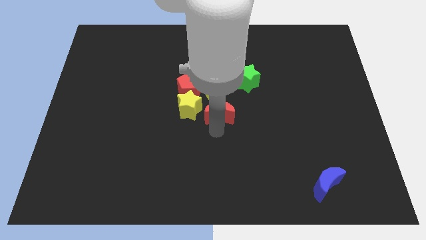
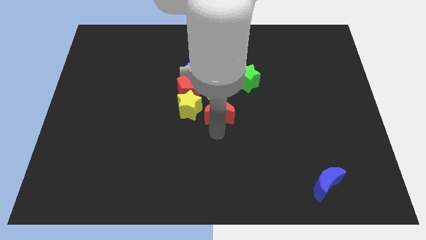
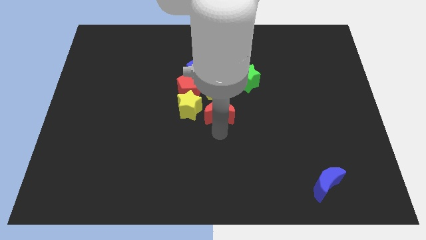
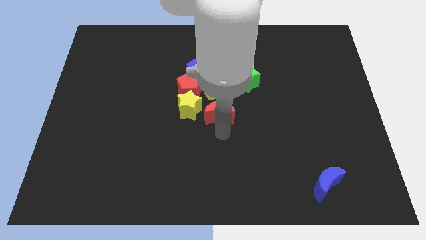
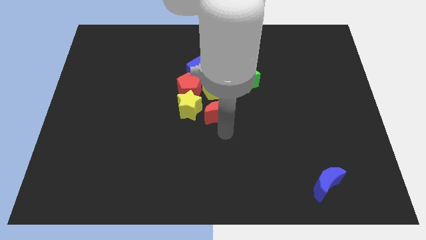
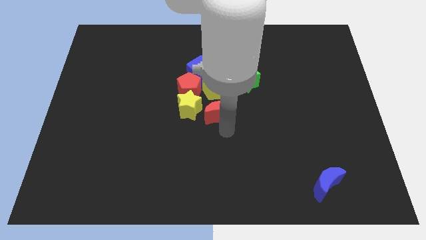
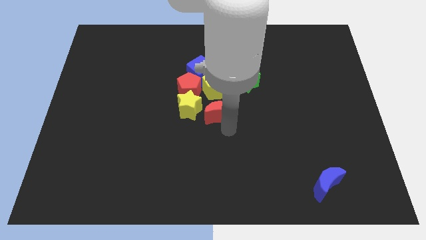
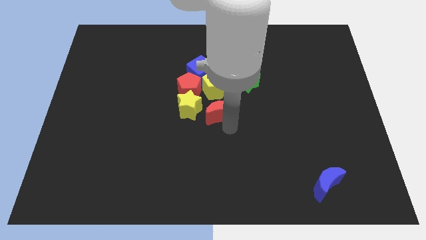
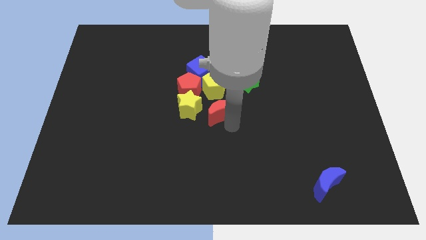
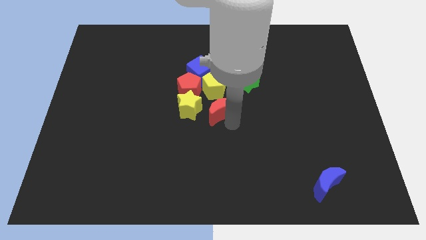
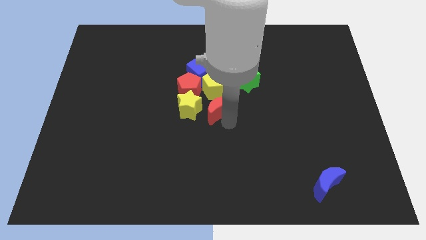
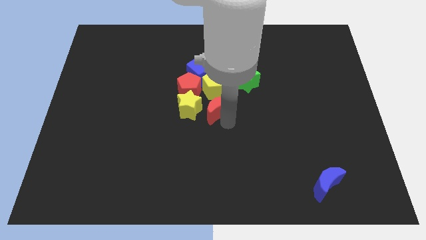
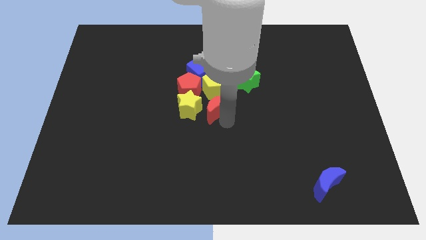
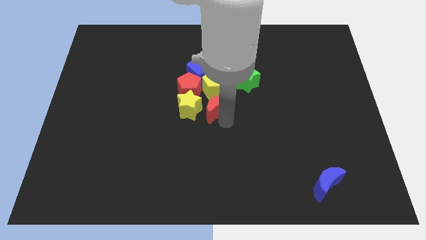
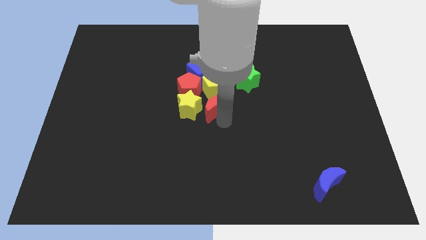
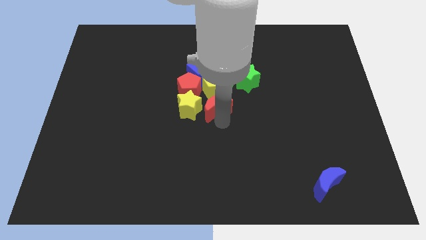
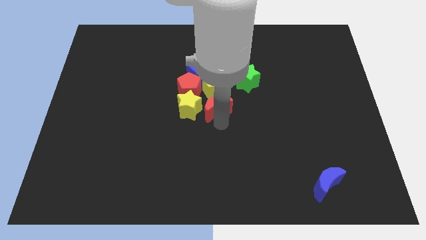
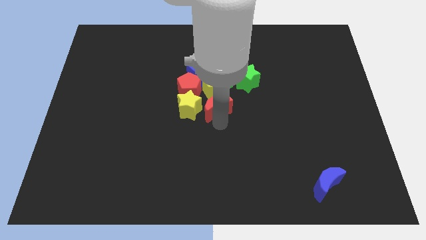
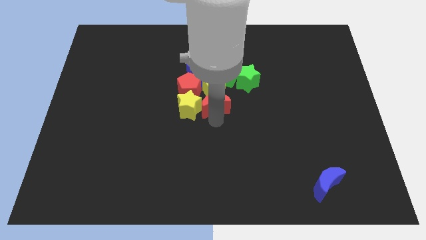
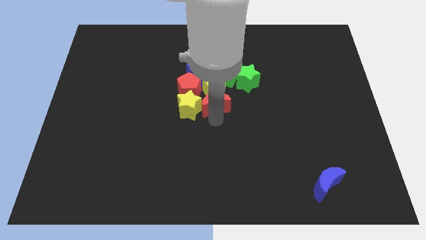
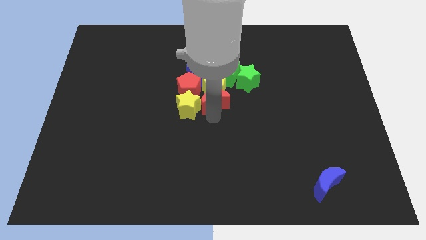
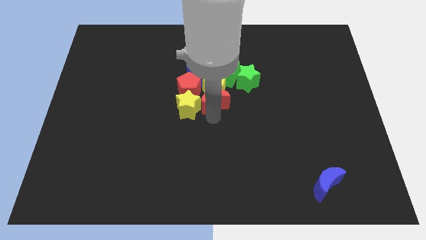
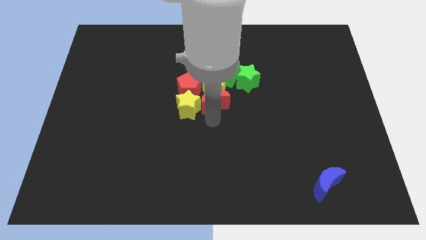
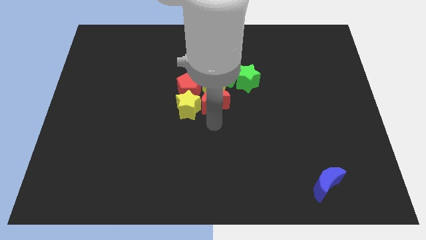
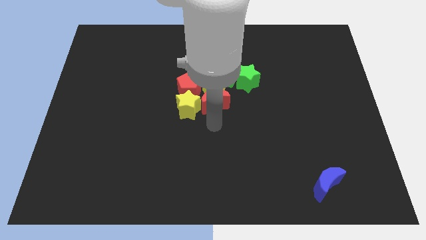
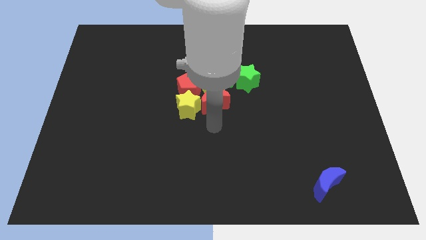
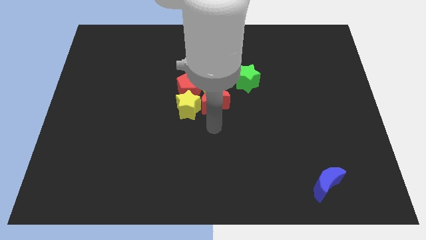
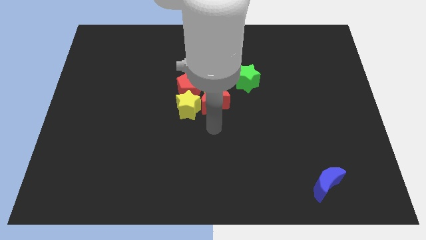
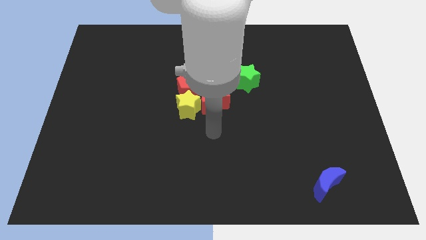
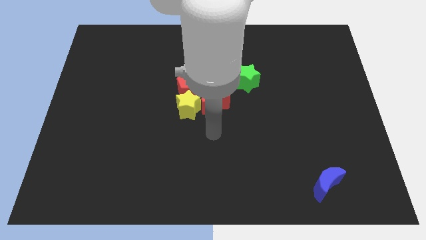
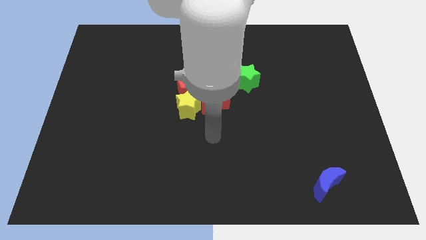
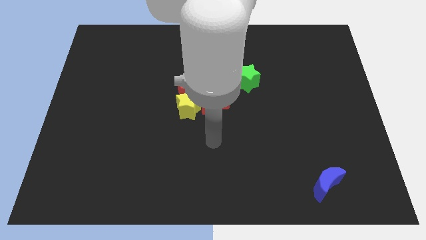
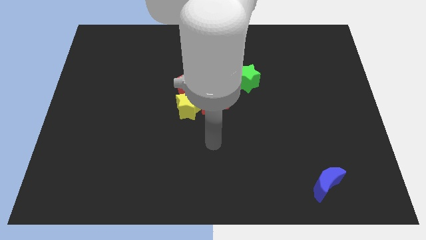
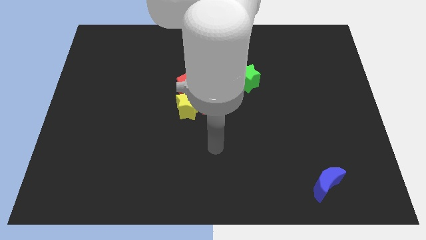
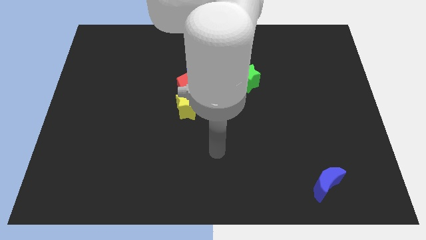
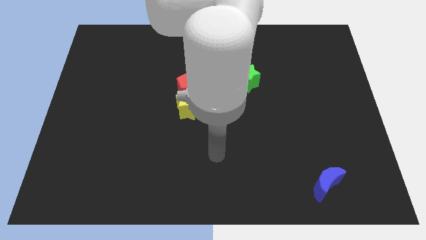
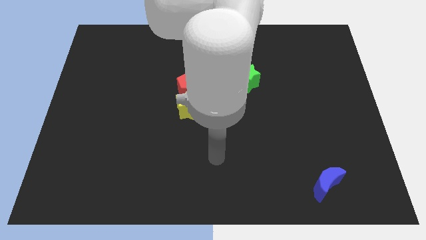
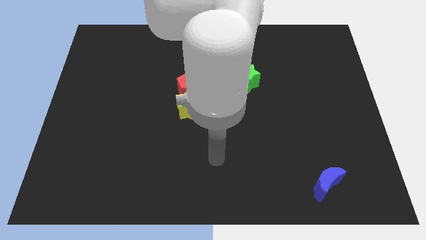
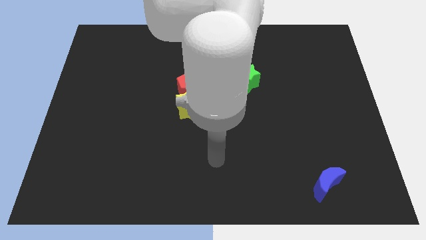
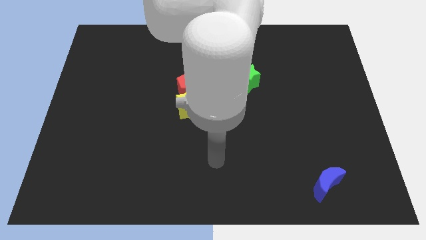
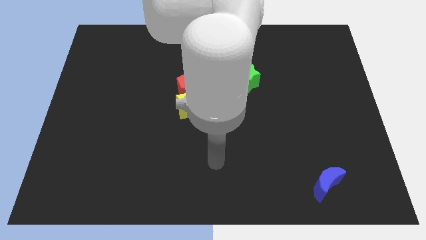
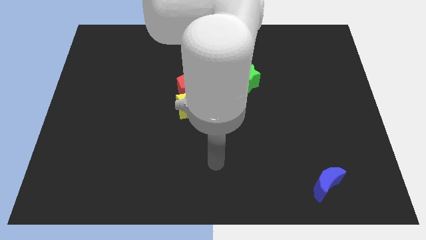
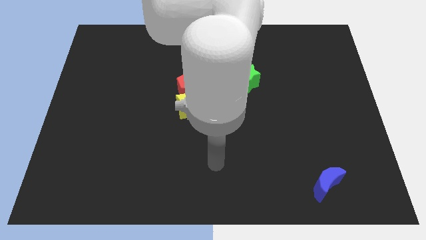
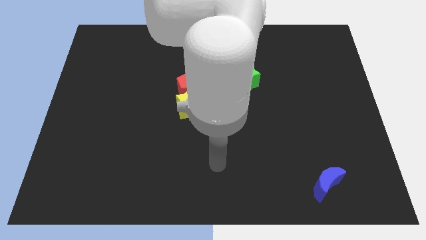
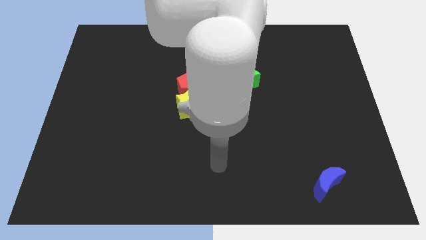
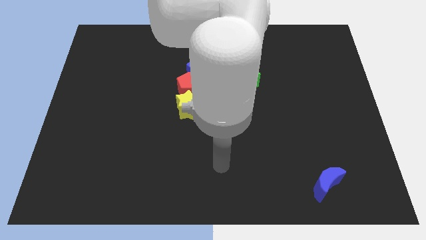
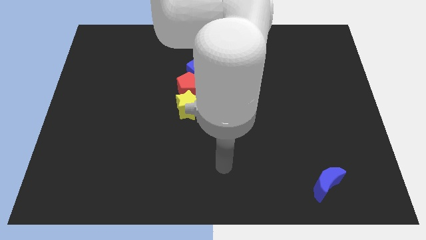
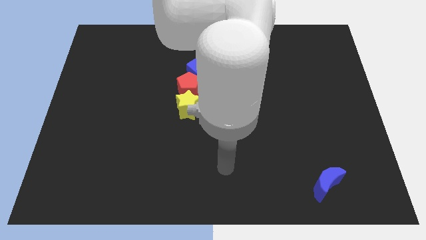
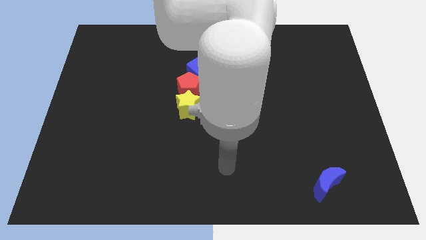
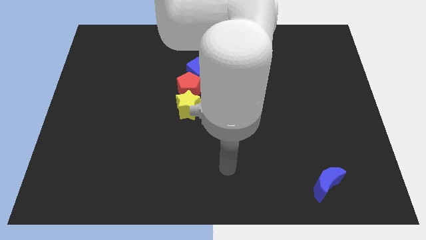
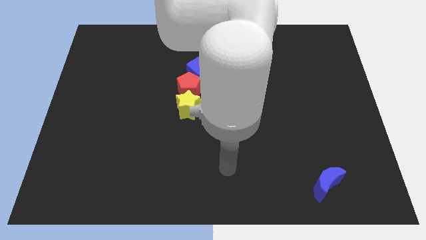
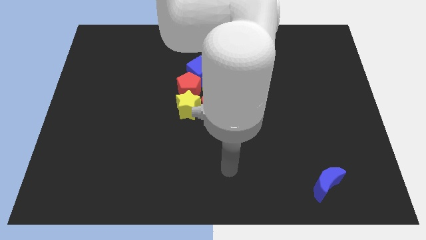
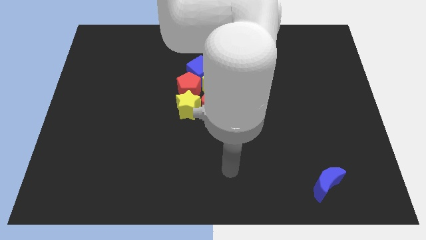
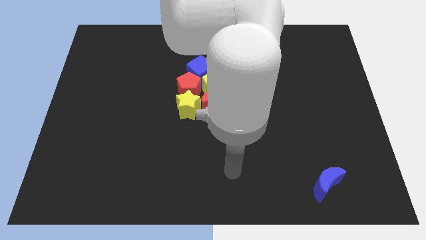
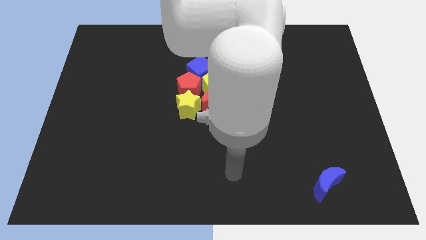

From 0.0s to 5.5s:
push the red crescent to the center of the board

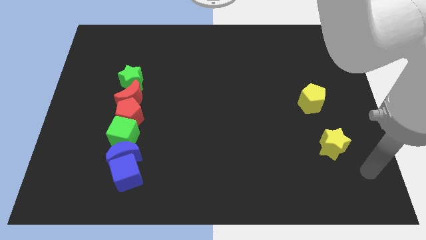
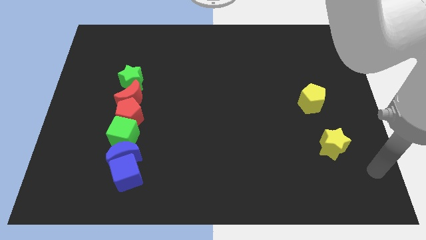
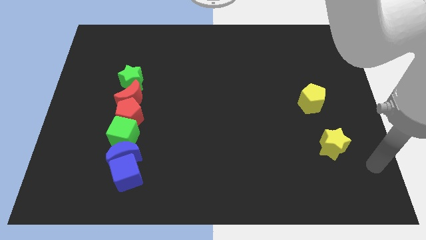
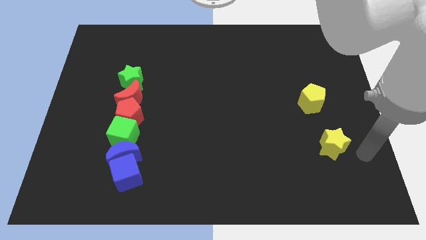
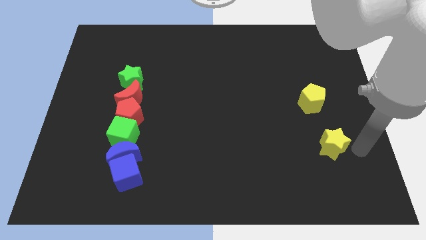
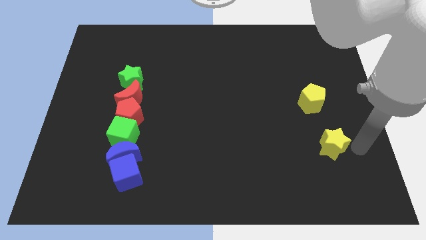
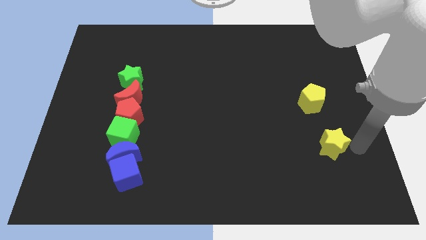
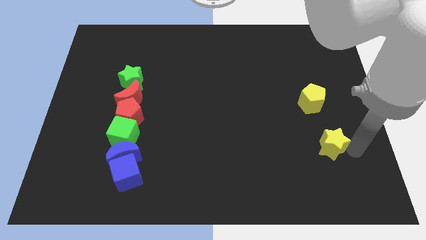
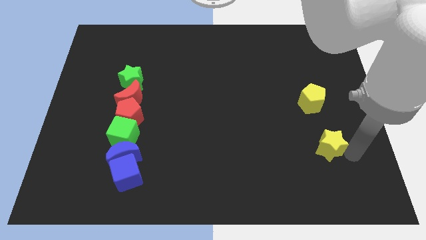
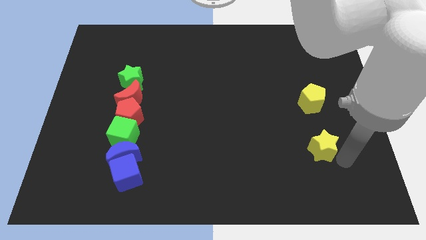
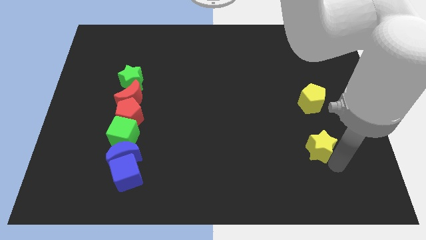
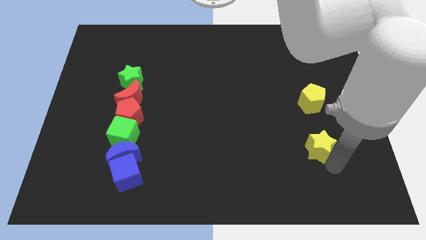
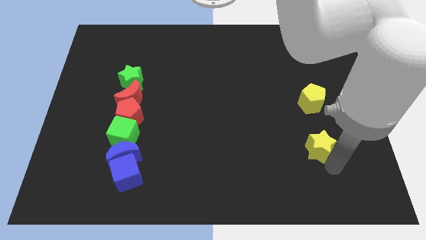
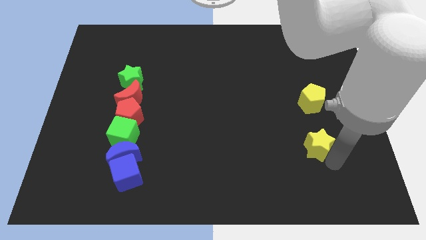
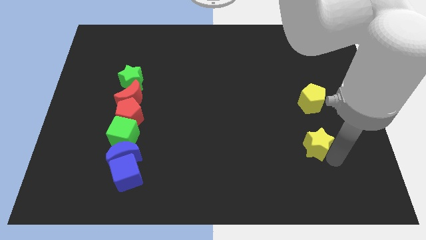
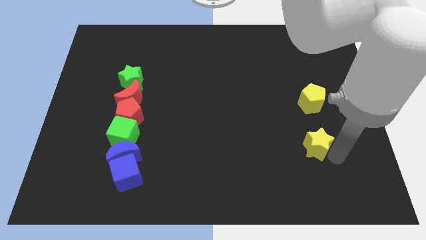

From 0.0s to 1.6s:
place the yellow star vertically below the yellow pentagon

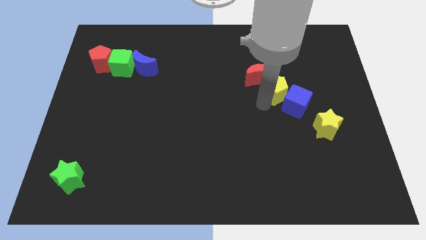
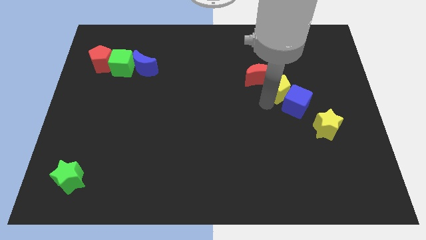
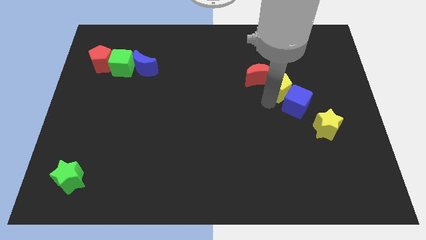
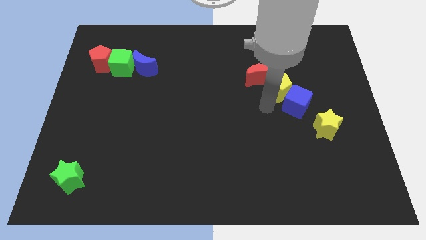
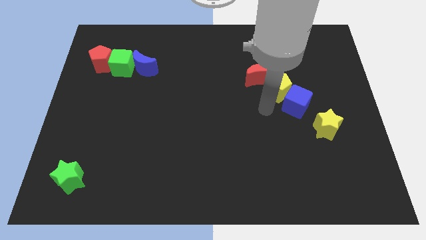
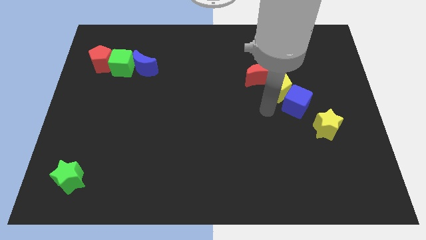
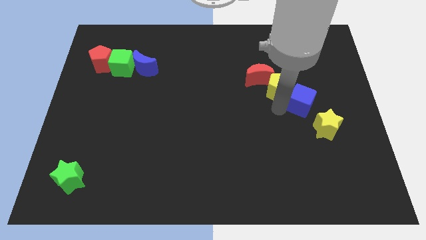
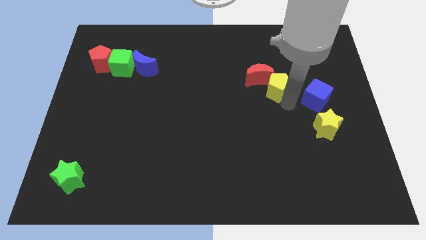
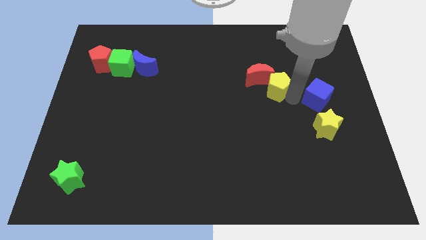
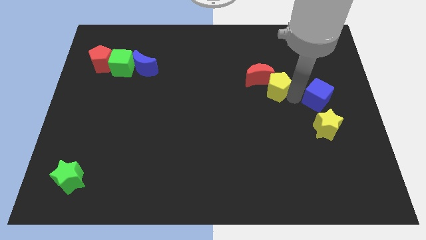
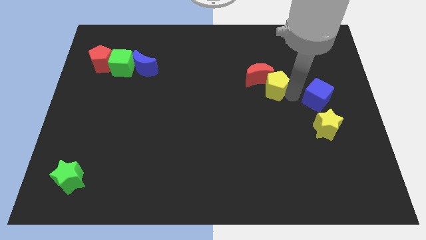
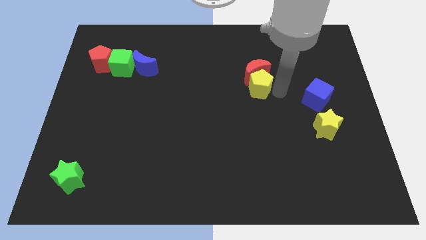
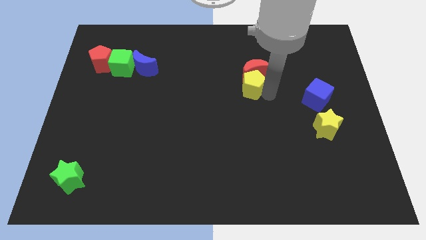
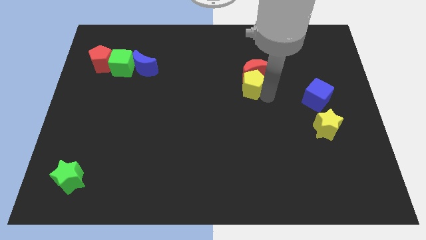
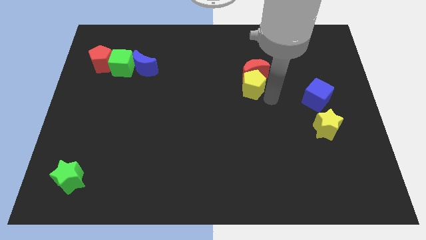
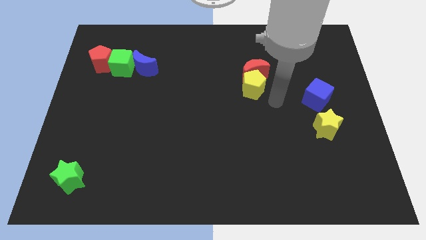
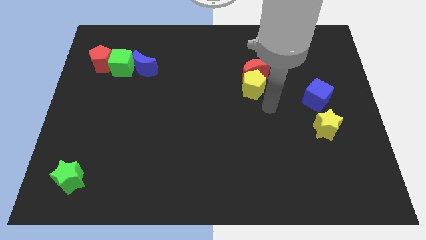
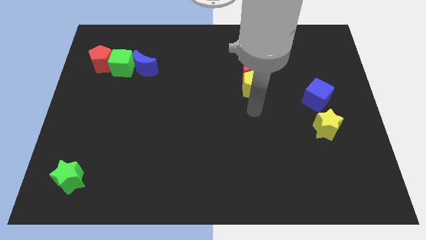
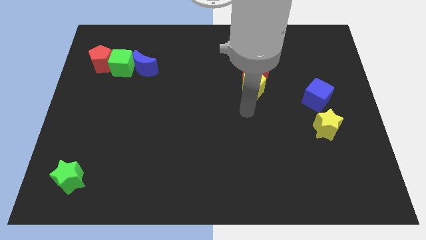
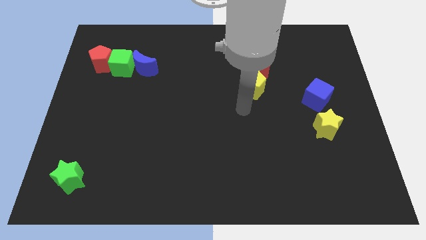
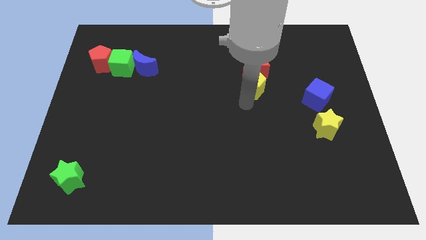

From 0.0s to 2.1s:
move yellow pentagon below the red moon
